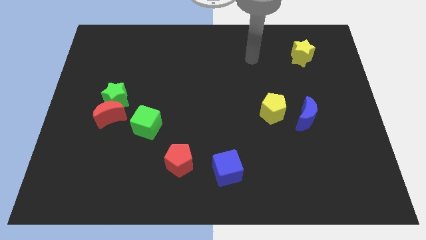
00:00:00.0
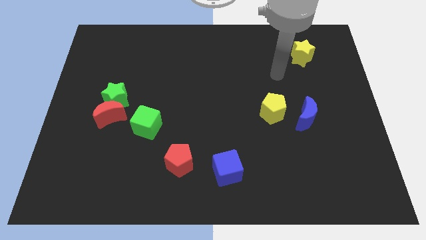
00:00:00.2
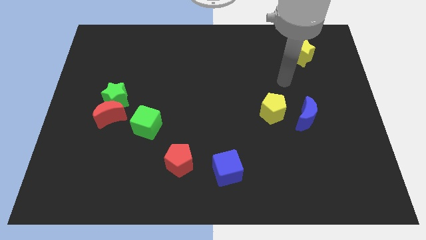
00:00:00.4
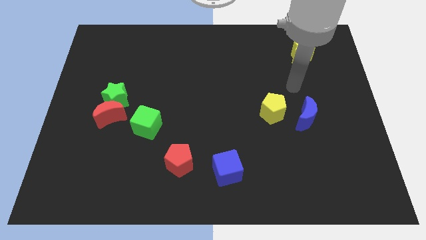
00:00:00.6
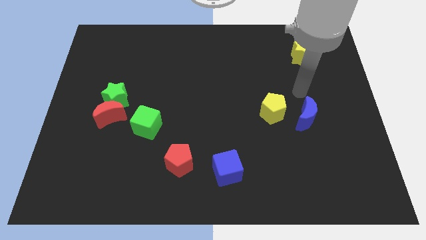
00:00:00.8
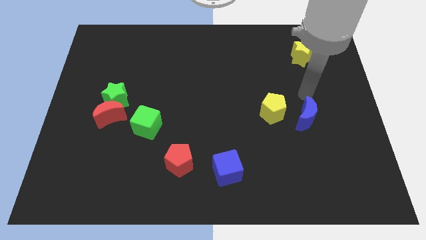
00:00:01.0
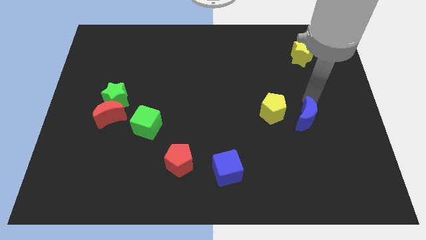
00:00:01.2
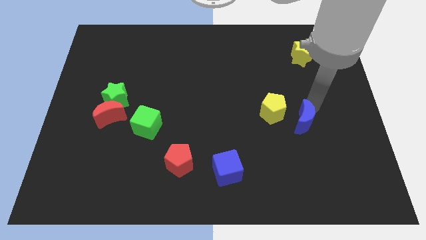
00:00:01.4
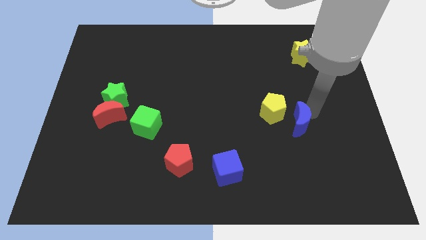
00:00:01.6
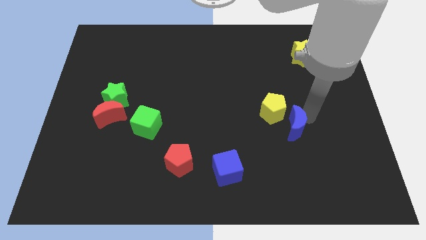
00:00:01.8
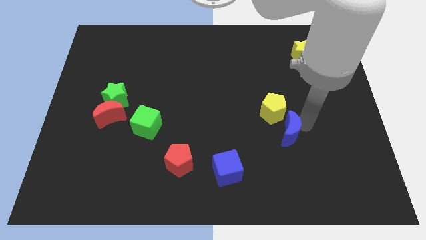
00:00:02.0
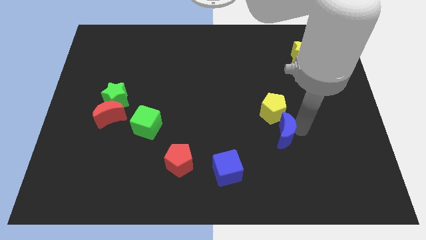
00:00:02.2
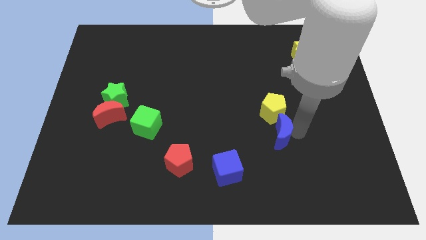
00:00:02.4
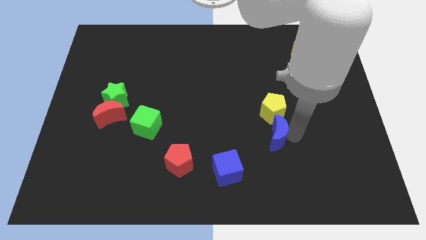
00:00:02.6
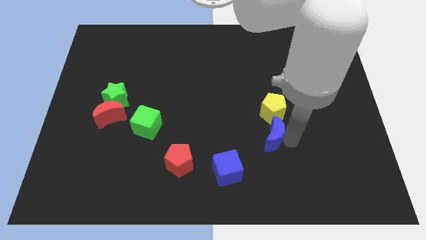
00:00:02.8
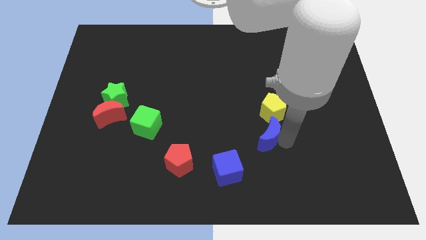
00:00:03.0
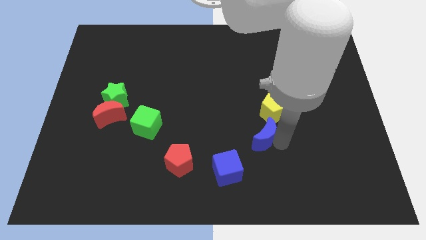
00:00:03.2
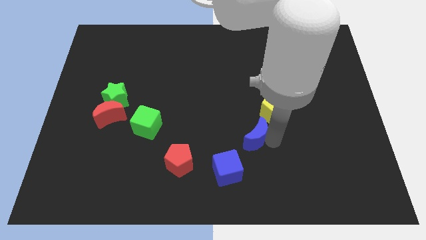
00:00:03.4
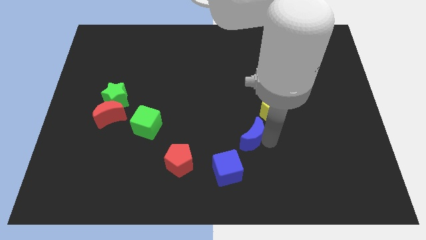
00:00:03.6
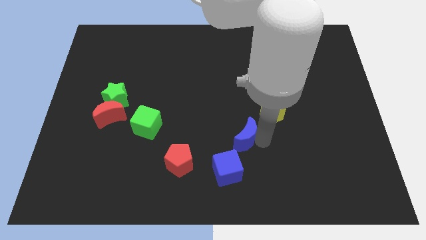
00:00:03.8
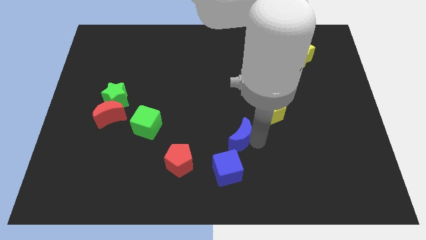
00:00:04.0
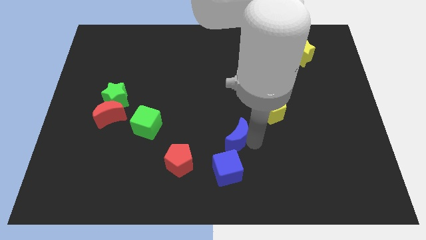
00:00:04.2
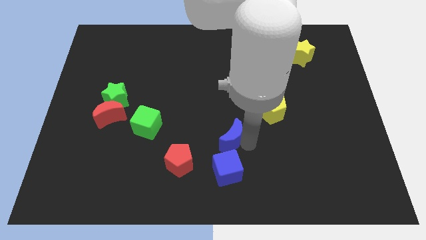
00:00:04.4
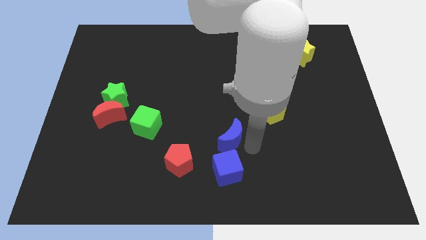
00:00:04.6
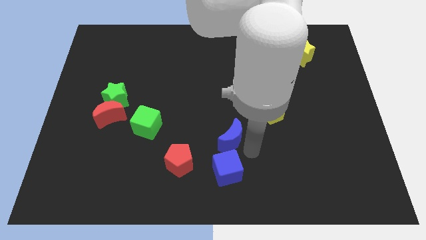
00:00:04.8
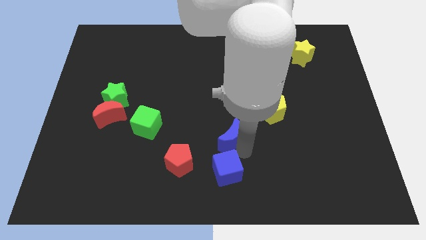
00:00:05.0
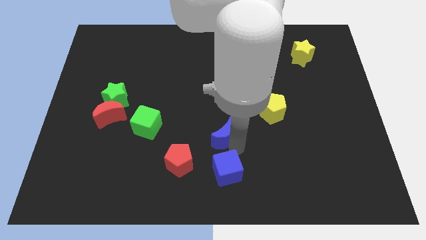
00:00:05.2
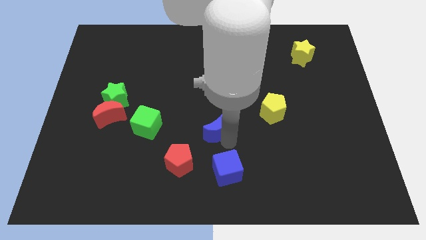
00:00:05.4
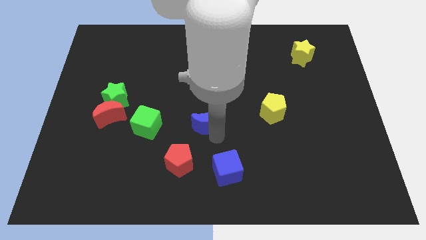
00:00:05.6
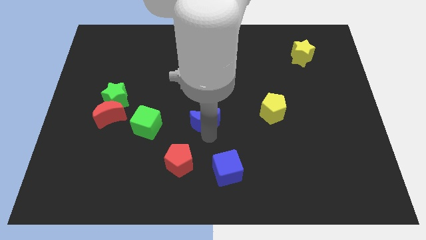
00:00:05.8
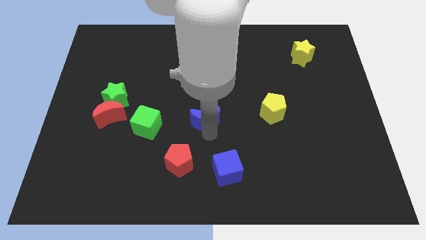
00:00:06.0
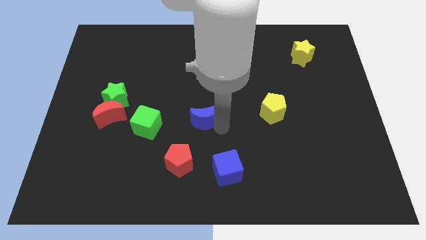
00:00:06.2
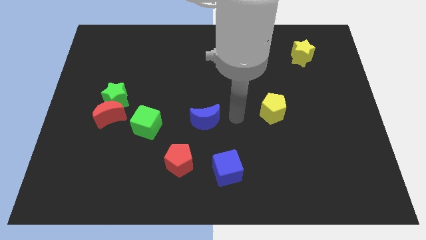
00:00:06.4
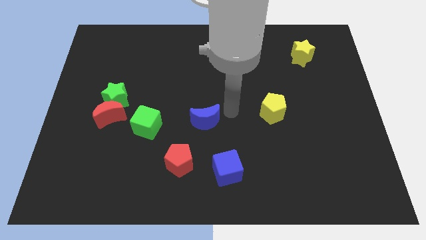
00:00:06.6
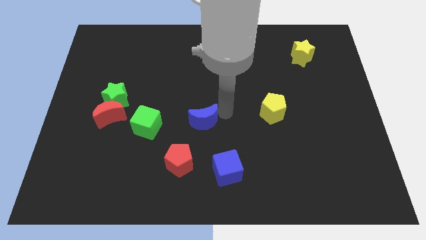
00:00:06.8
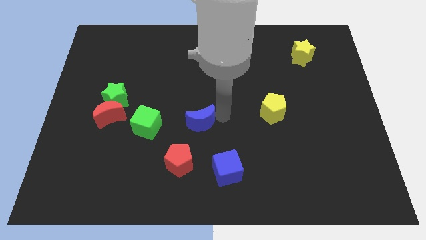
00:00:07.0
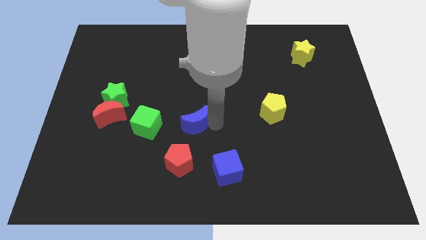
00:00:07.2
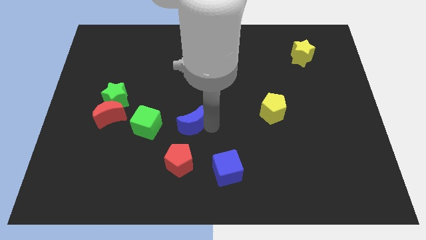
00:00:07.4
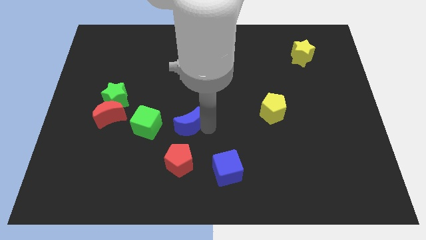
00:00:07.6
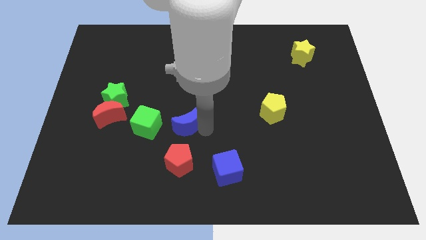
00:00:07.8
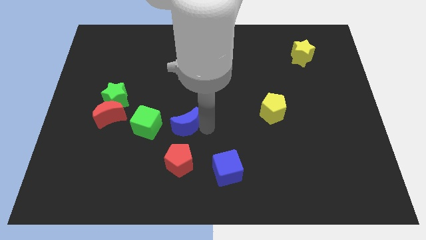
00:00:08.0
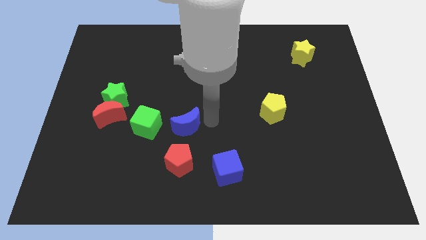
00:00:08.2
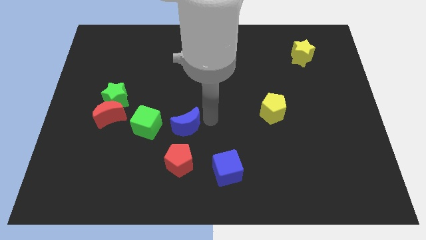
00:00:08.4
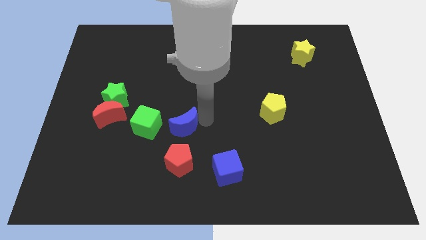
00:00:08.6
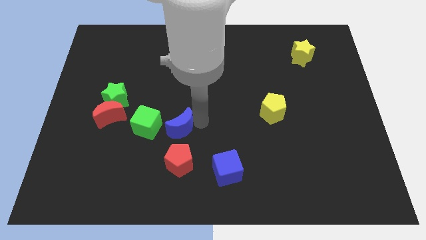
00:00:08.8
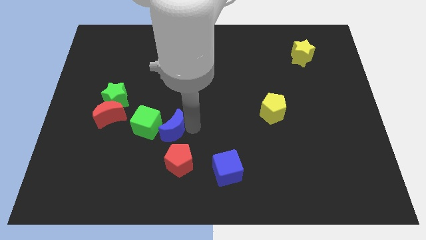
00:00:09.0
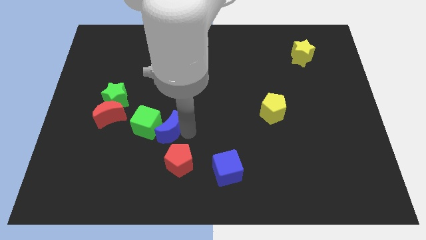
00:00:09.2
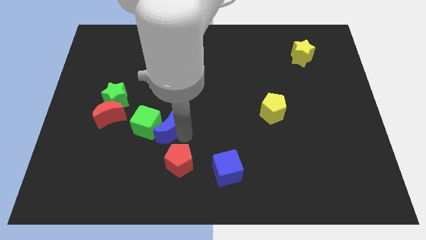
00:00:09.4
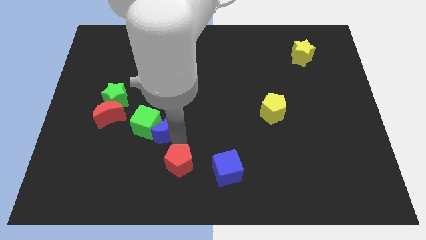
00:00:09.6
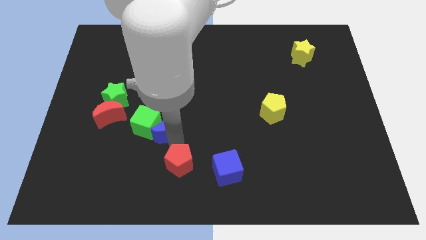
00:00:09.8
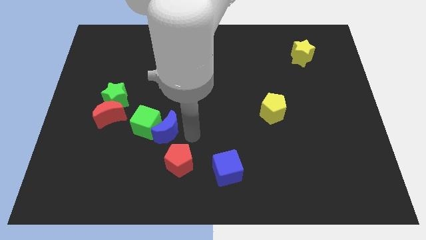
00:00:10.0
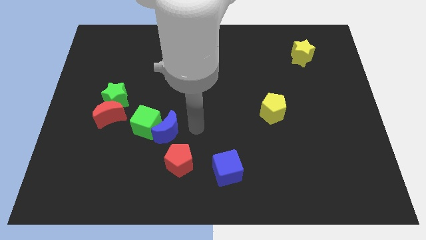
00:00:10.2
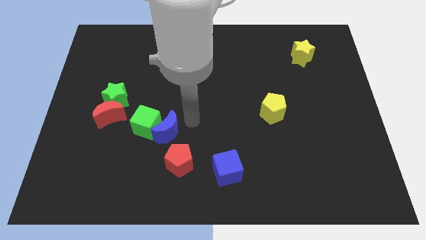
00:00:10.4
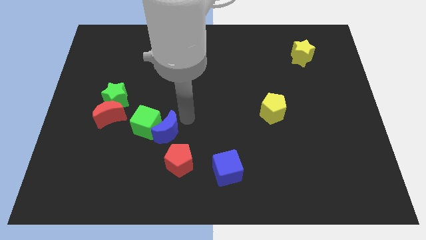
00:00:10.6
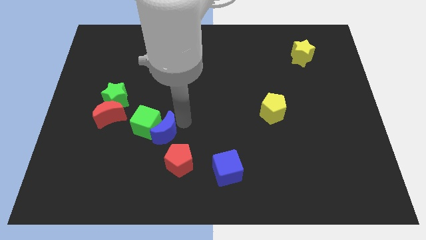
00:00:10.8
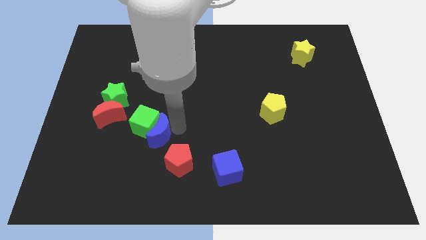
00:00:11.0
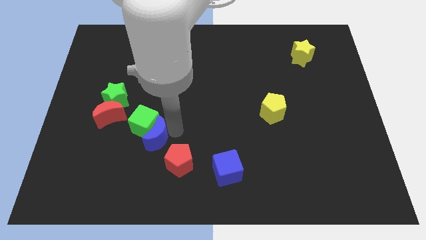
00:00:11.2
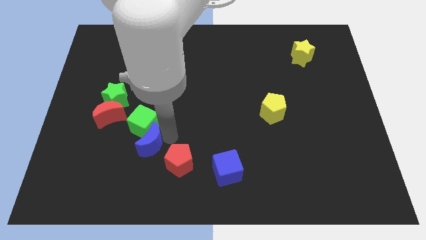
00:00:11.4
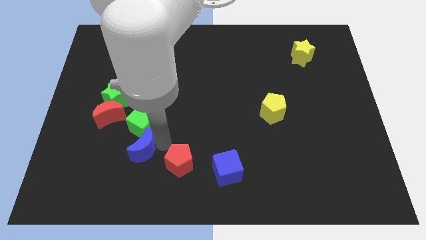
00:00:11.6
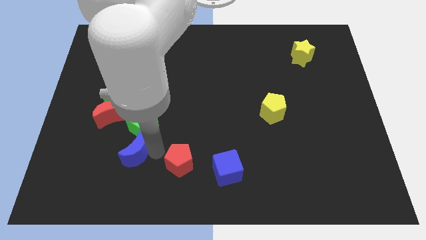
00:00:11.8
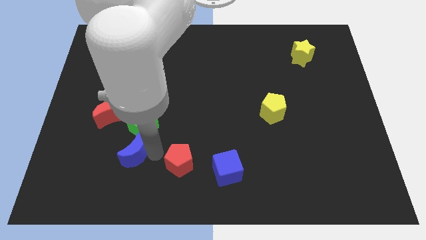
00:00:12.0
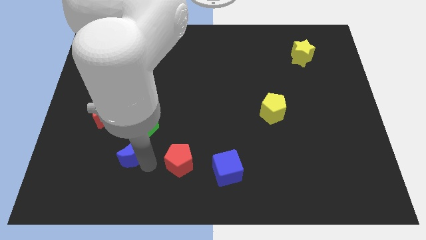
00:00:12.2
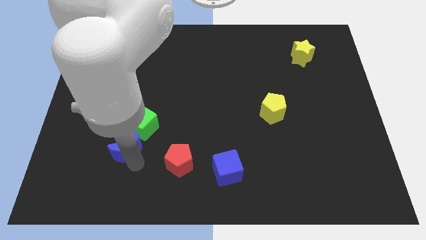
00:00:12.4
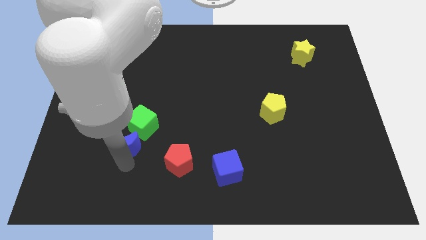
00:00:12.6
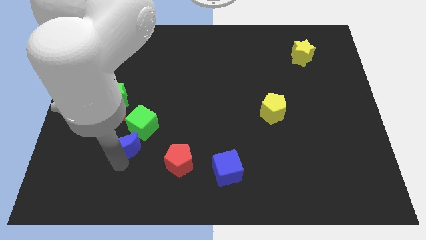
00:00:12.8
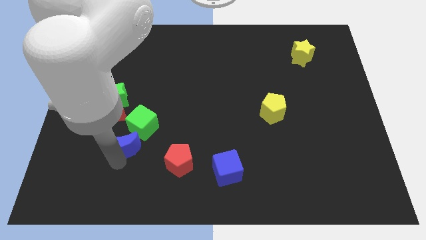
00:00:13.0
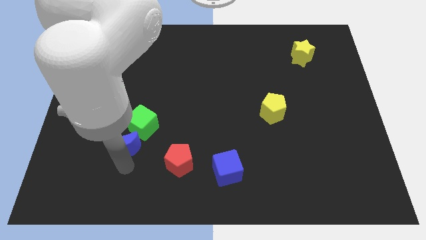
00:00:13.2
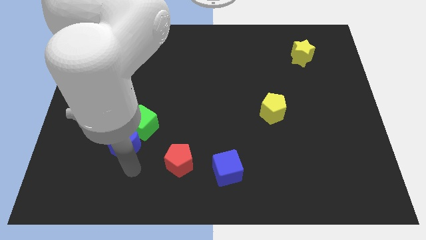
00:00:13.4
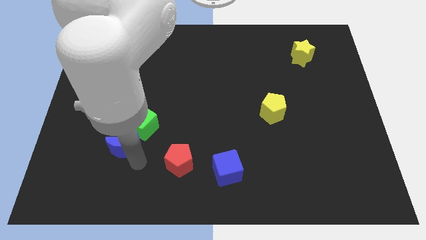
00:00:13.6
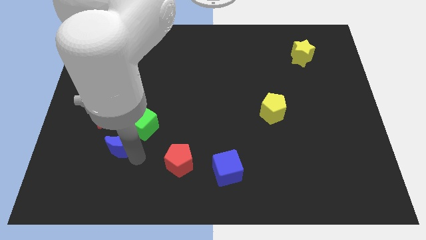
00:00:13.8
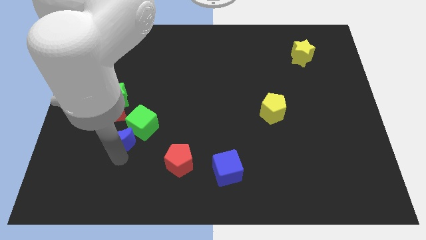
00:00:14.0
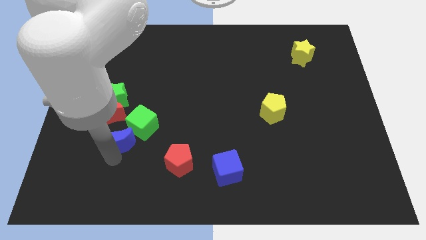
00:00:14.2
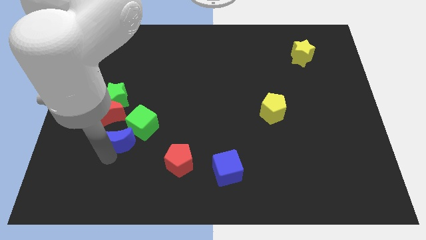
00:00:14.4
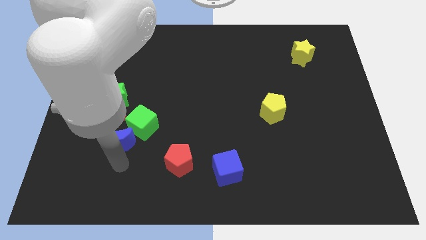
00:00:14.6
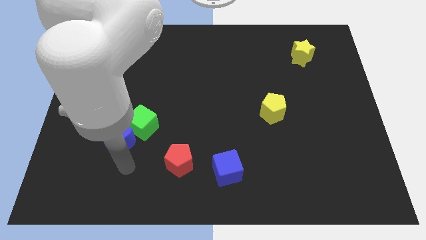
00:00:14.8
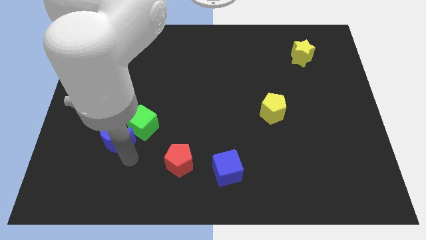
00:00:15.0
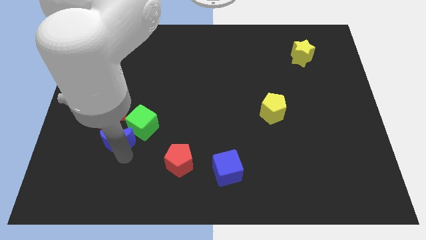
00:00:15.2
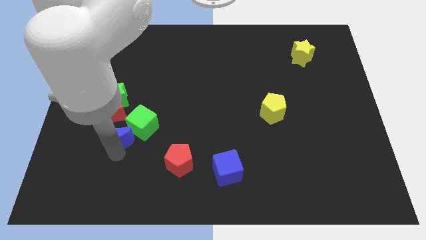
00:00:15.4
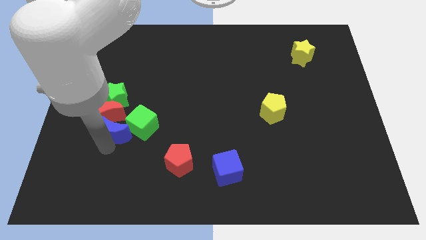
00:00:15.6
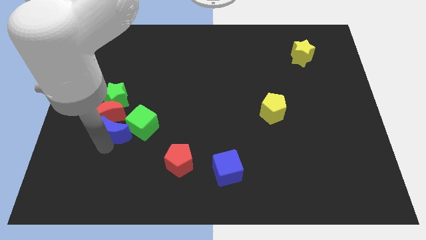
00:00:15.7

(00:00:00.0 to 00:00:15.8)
move the blue moon next to the red moon
